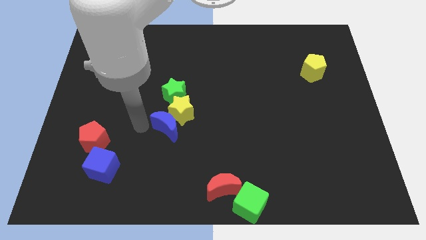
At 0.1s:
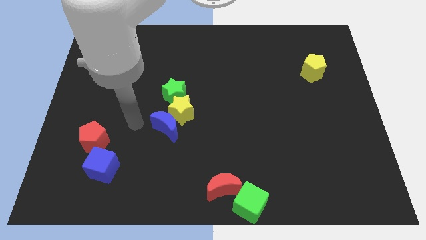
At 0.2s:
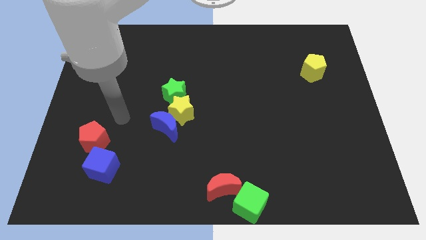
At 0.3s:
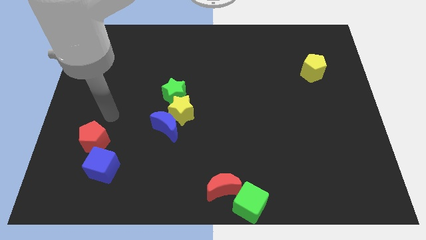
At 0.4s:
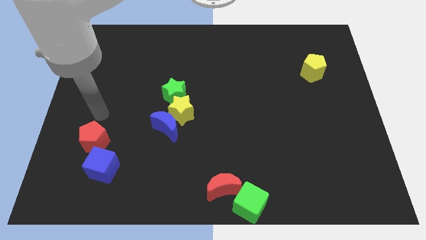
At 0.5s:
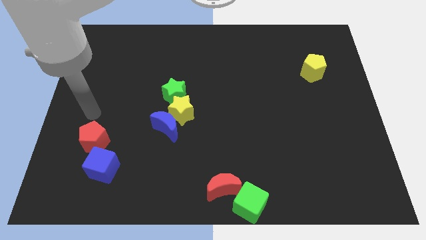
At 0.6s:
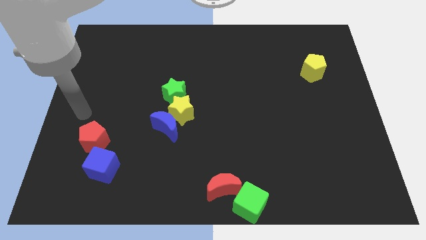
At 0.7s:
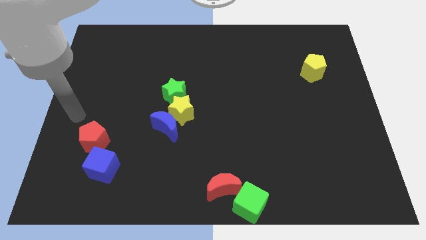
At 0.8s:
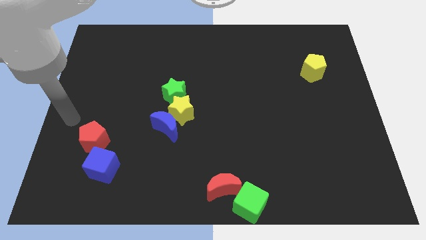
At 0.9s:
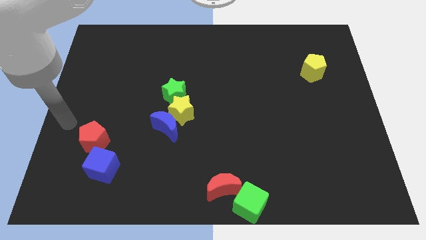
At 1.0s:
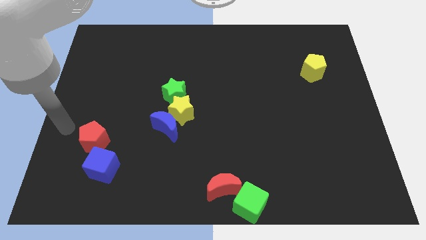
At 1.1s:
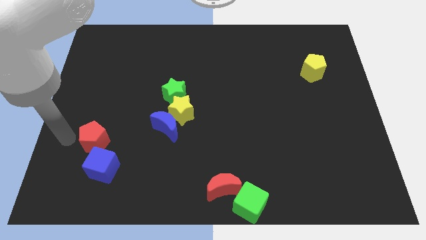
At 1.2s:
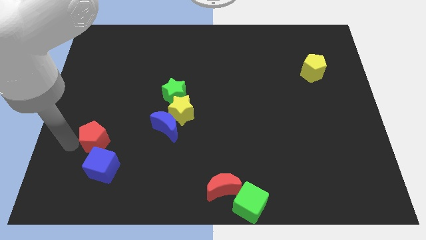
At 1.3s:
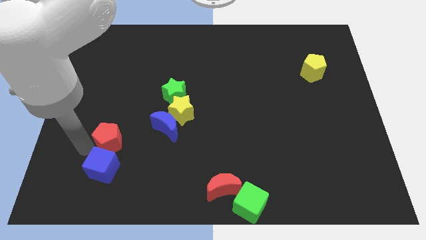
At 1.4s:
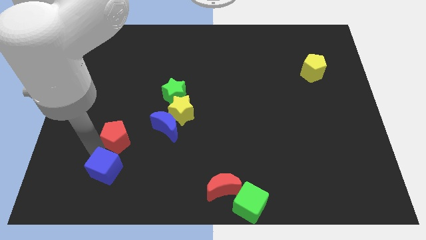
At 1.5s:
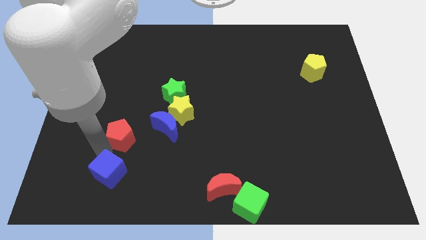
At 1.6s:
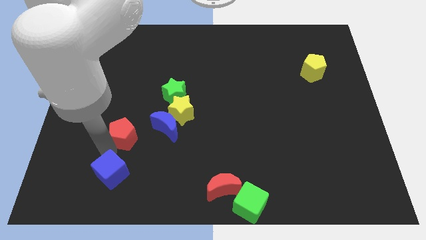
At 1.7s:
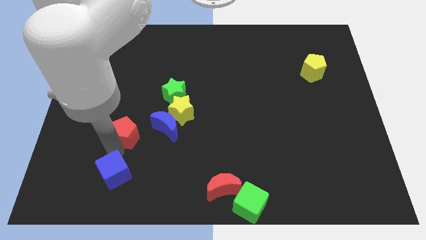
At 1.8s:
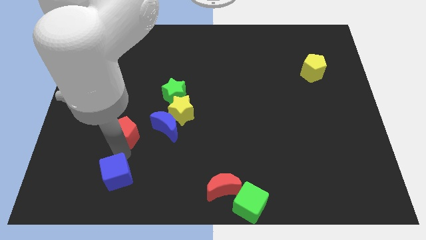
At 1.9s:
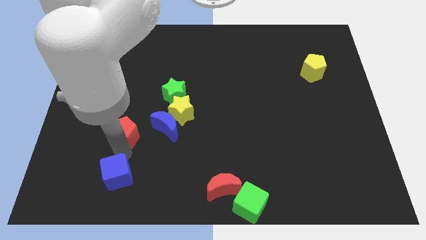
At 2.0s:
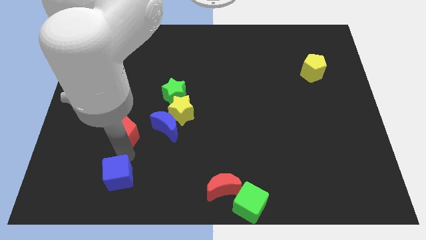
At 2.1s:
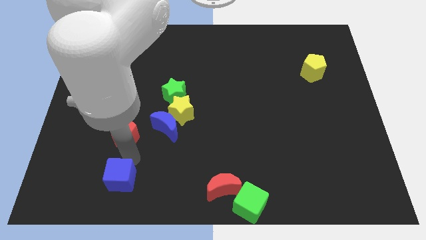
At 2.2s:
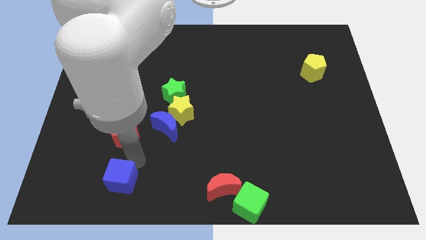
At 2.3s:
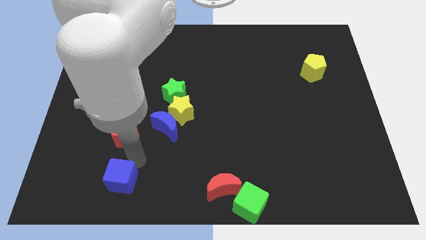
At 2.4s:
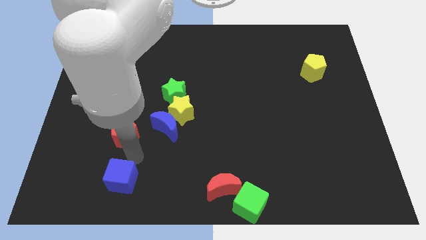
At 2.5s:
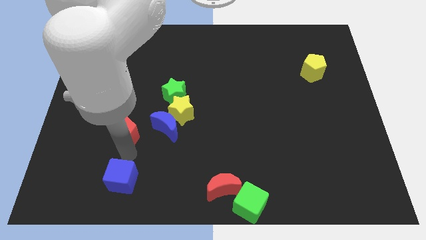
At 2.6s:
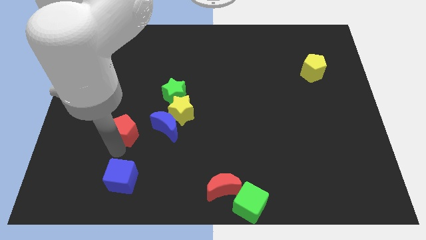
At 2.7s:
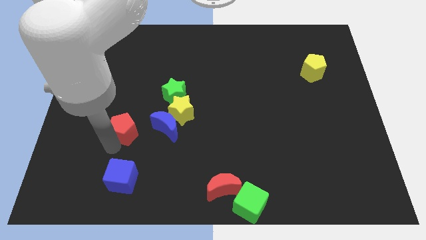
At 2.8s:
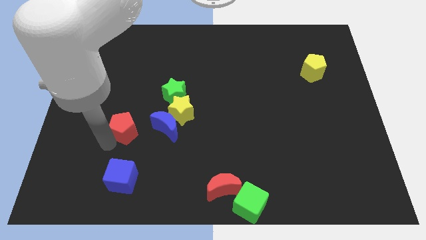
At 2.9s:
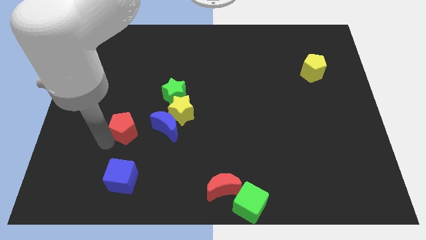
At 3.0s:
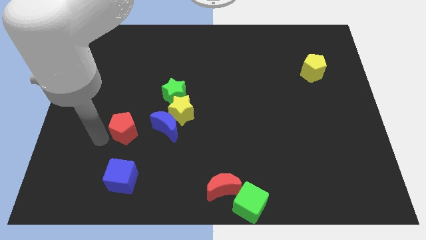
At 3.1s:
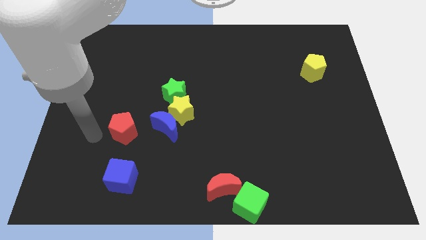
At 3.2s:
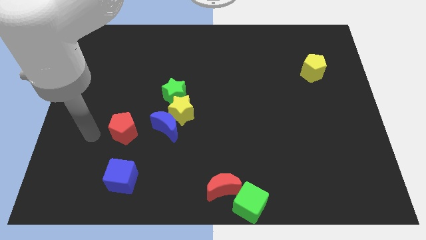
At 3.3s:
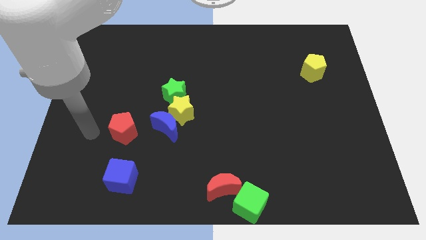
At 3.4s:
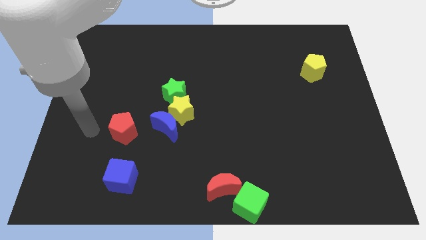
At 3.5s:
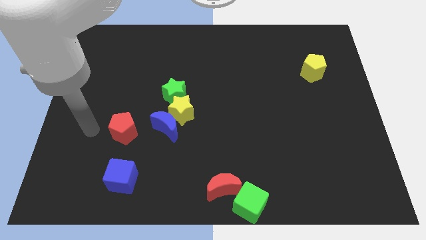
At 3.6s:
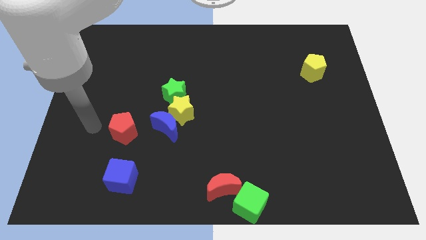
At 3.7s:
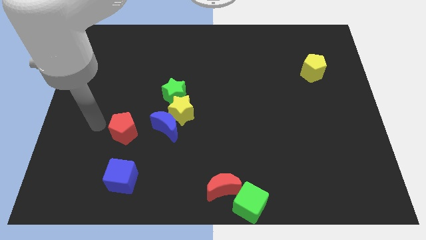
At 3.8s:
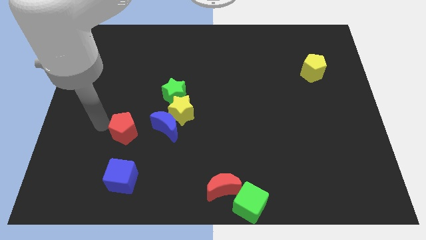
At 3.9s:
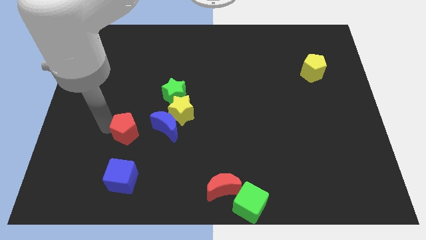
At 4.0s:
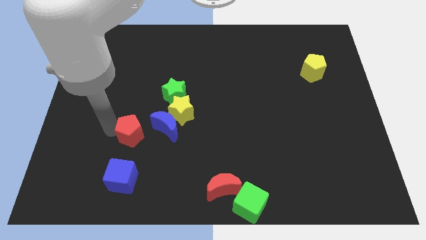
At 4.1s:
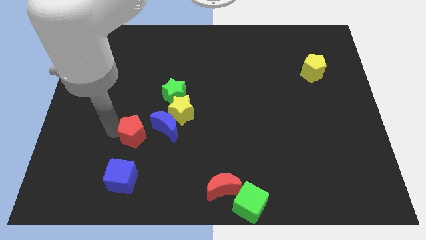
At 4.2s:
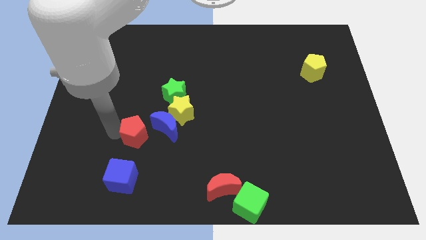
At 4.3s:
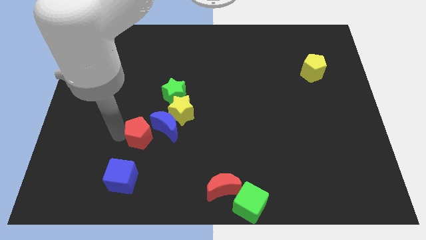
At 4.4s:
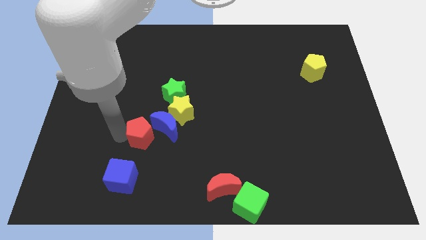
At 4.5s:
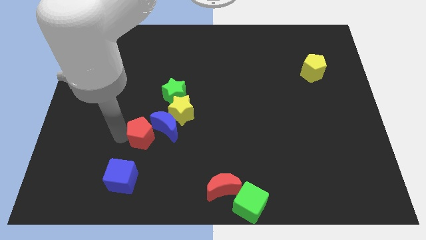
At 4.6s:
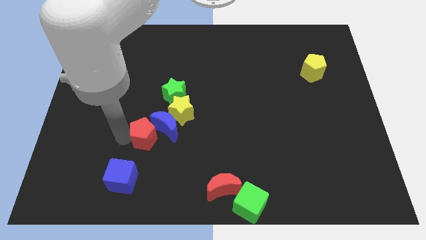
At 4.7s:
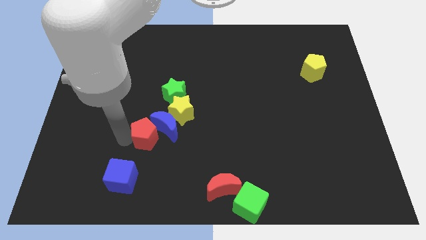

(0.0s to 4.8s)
push the red pentagon into the blue crescent

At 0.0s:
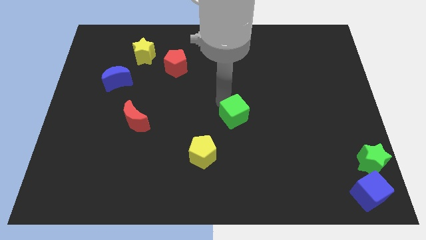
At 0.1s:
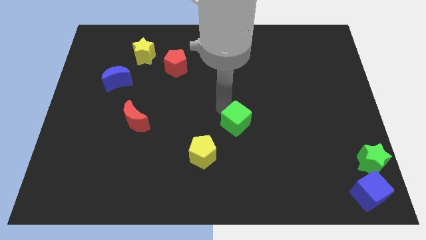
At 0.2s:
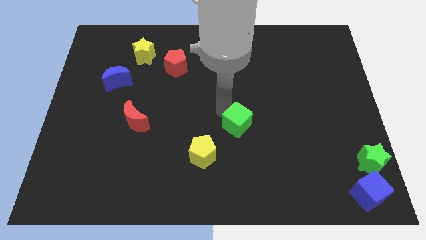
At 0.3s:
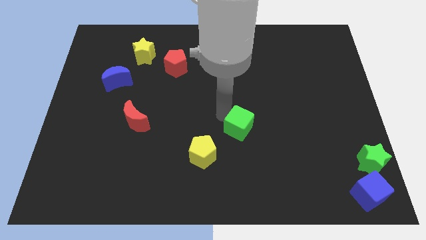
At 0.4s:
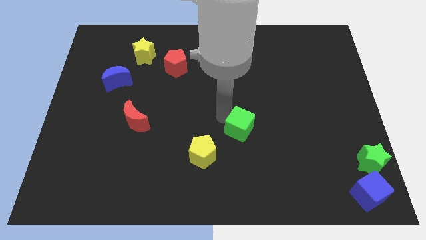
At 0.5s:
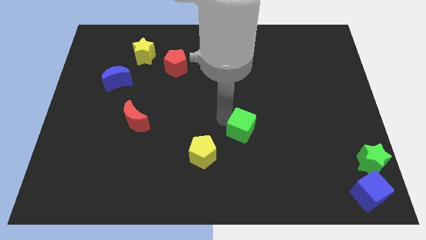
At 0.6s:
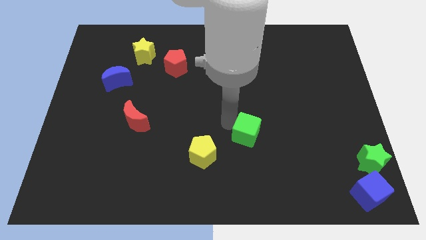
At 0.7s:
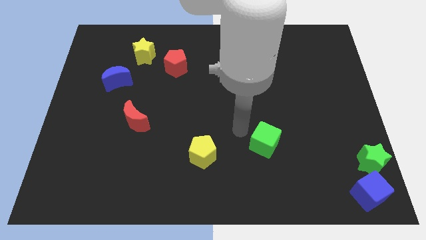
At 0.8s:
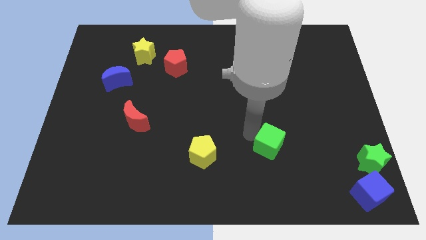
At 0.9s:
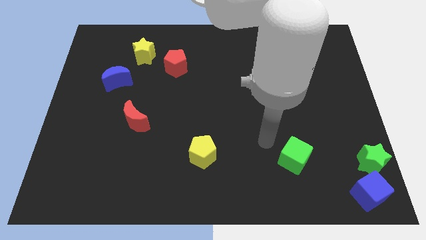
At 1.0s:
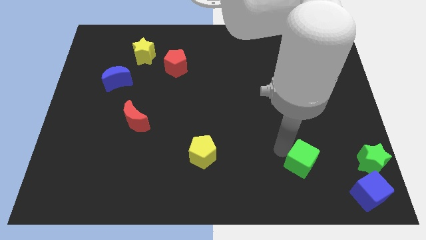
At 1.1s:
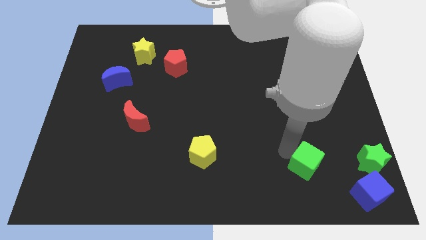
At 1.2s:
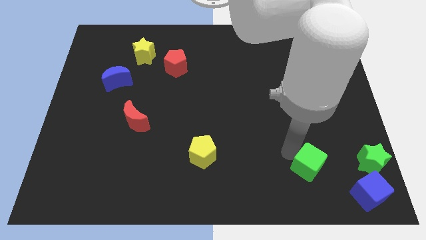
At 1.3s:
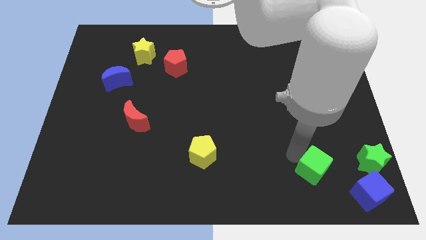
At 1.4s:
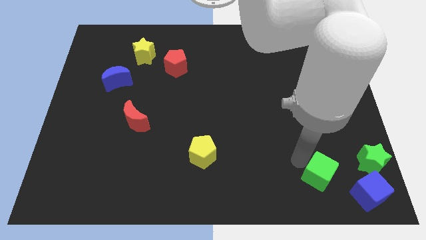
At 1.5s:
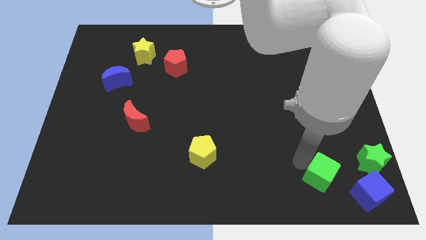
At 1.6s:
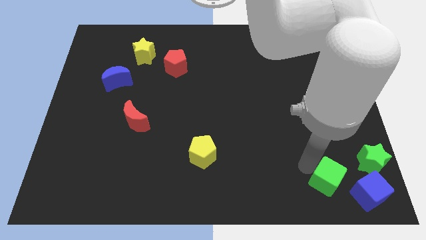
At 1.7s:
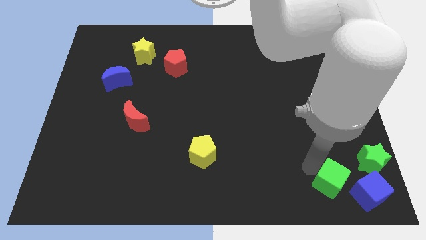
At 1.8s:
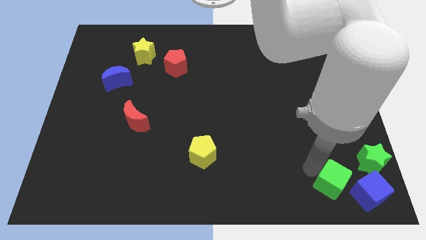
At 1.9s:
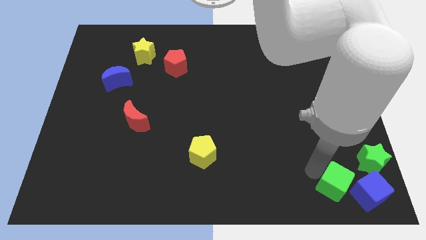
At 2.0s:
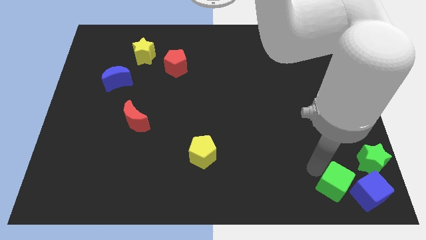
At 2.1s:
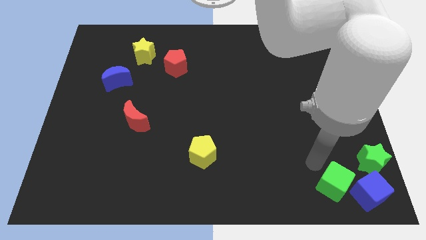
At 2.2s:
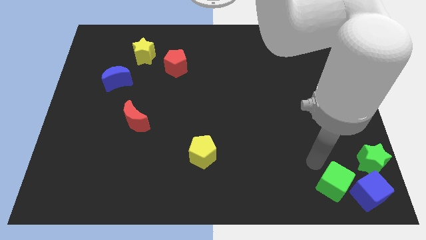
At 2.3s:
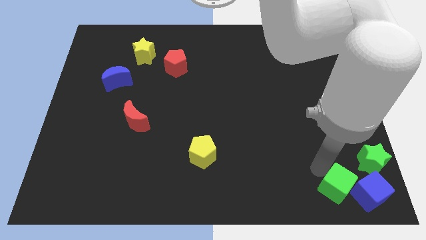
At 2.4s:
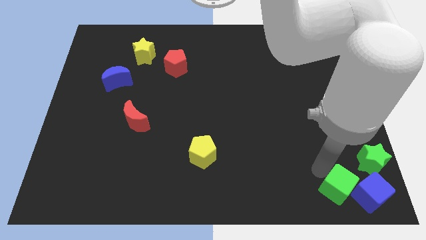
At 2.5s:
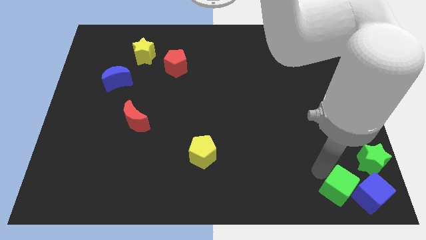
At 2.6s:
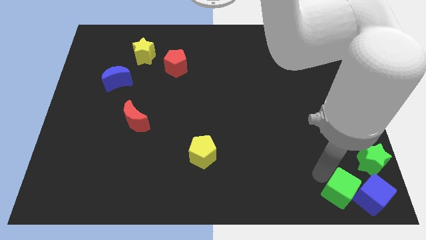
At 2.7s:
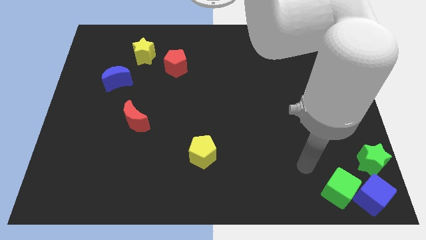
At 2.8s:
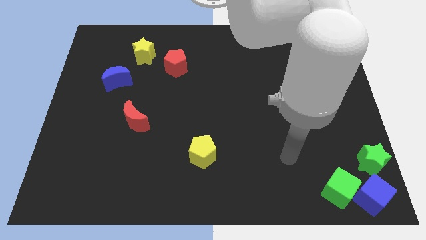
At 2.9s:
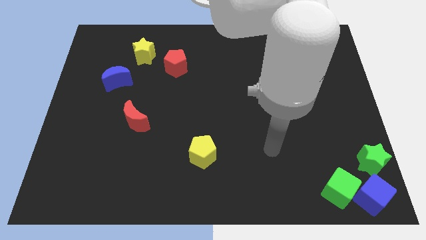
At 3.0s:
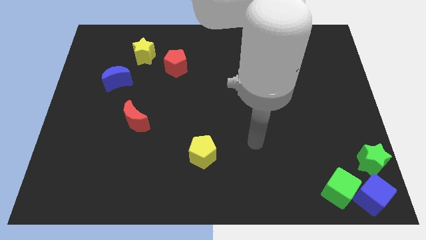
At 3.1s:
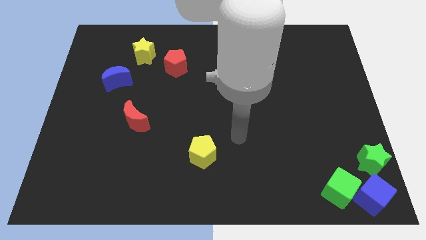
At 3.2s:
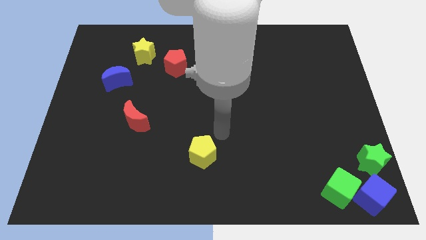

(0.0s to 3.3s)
drag the green cube into blue cube

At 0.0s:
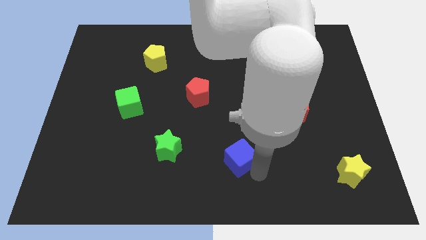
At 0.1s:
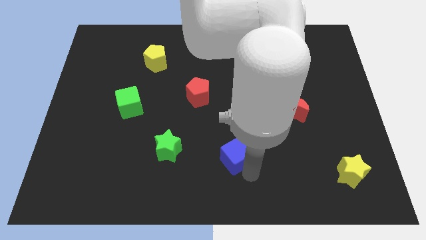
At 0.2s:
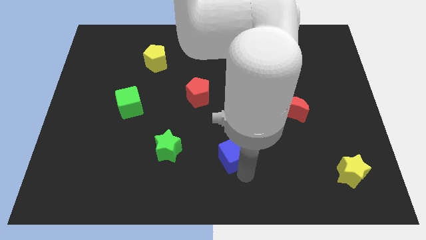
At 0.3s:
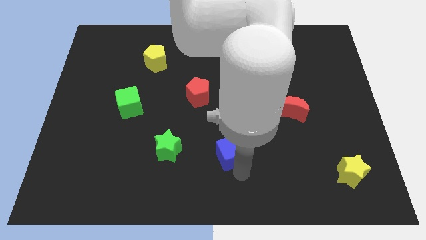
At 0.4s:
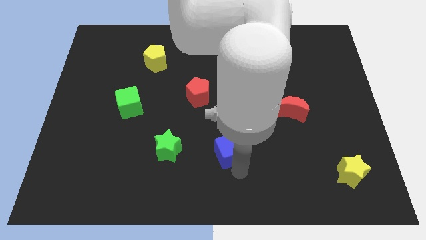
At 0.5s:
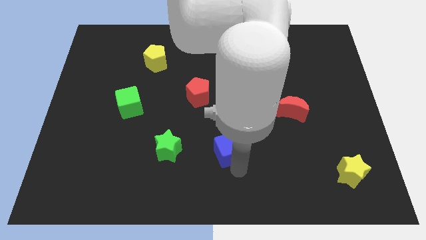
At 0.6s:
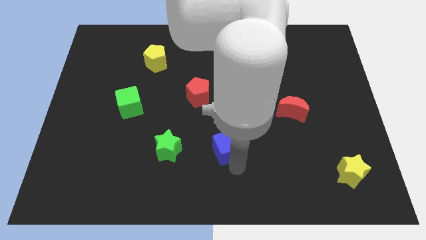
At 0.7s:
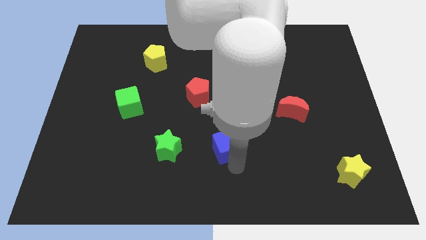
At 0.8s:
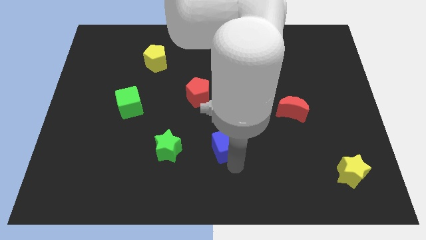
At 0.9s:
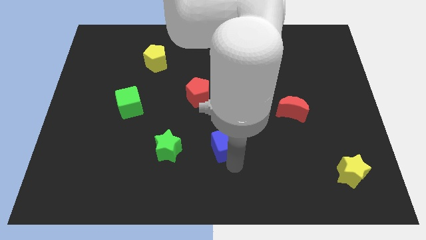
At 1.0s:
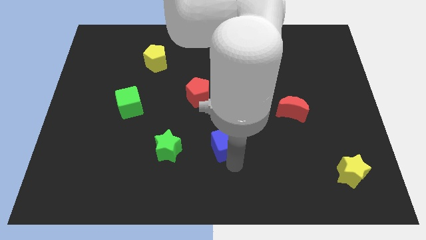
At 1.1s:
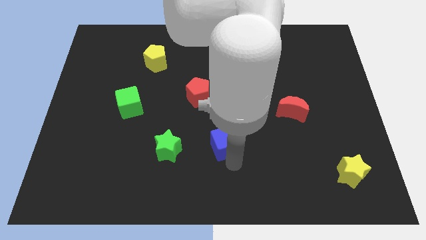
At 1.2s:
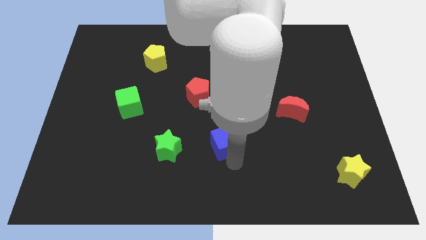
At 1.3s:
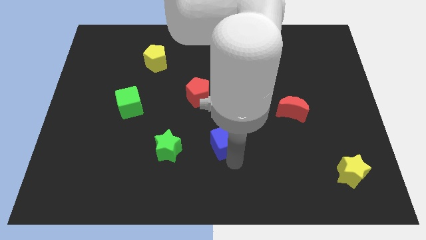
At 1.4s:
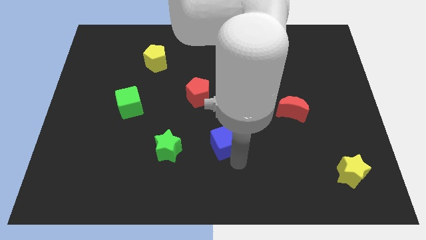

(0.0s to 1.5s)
adjust the blue cube to the right side of the green star
